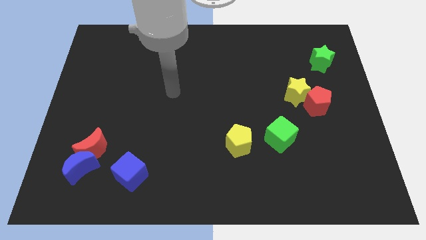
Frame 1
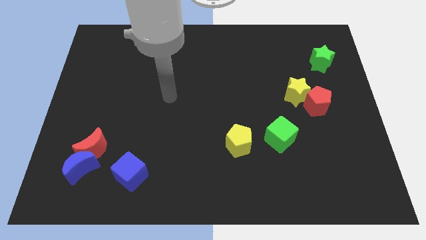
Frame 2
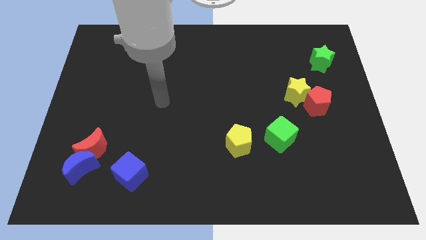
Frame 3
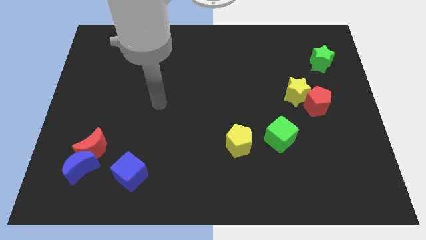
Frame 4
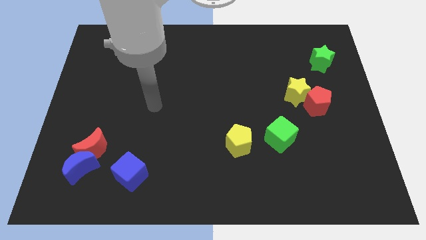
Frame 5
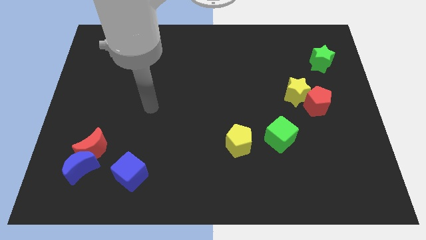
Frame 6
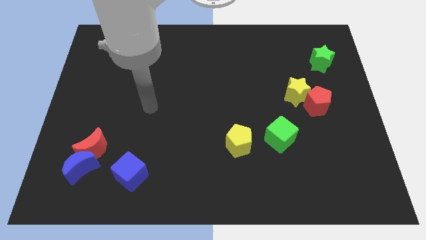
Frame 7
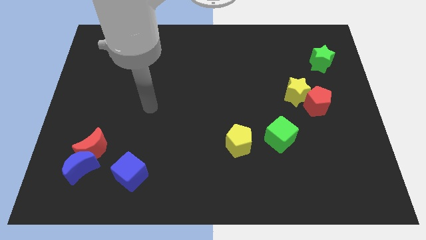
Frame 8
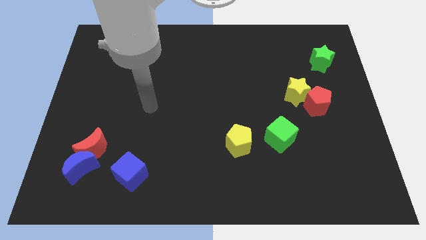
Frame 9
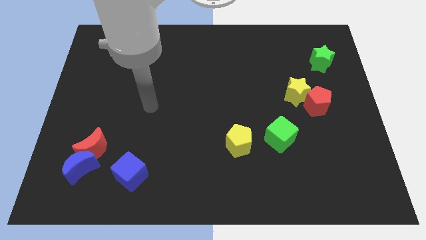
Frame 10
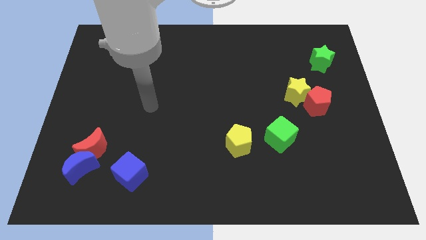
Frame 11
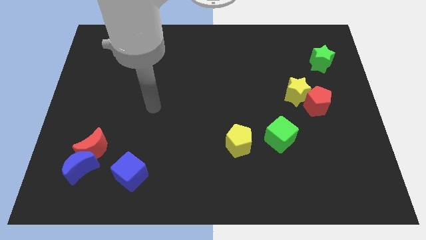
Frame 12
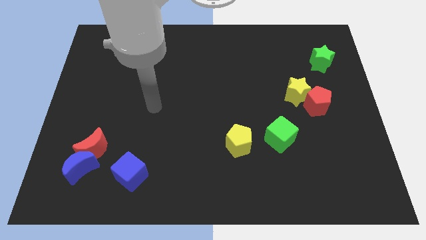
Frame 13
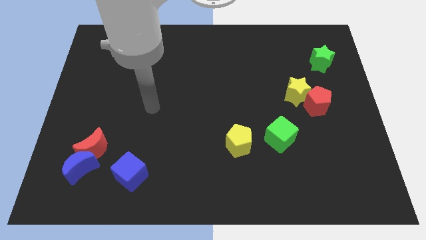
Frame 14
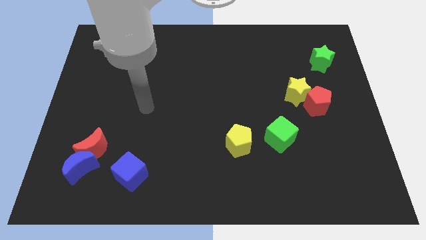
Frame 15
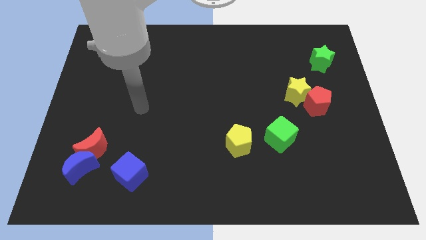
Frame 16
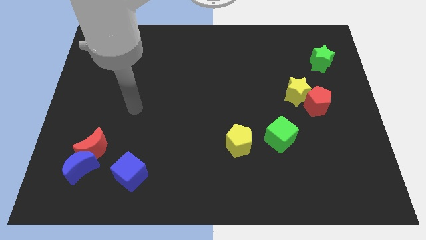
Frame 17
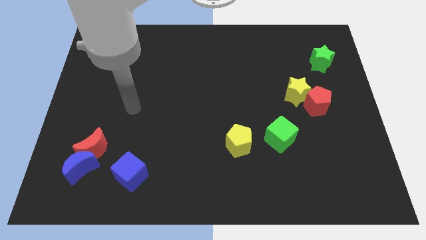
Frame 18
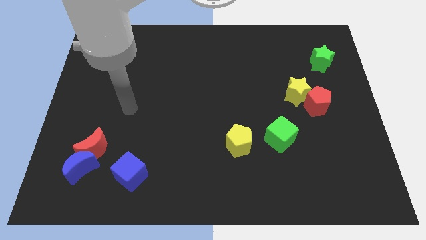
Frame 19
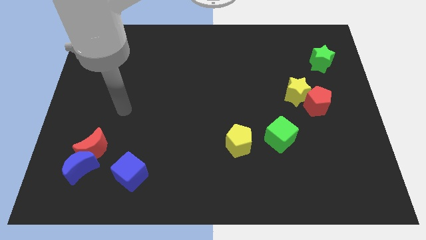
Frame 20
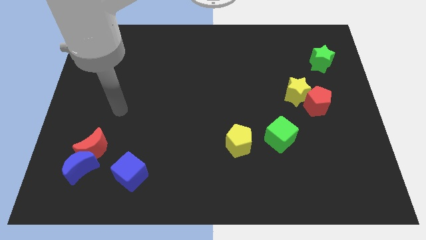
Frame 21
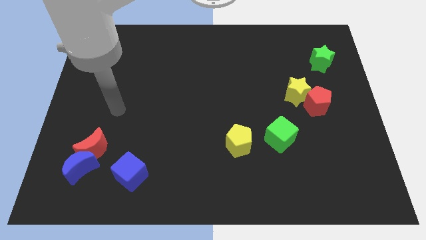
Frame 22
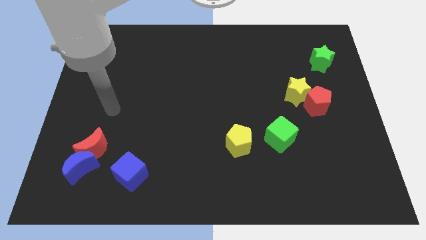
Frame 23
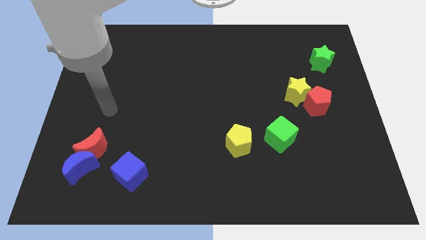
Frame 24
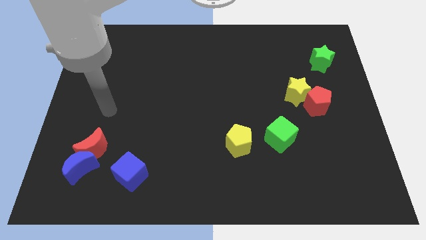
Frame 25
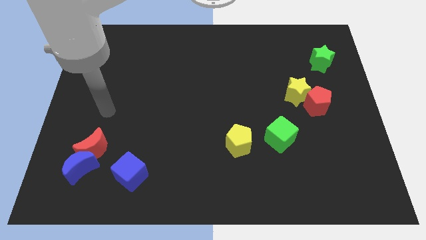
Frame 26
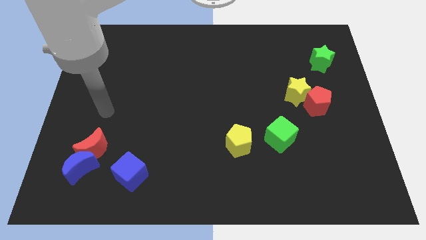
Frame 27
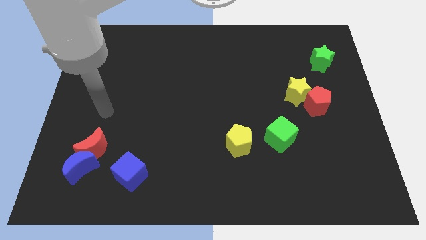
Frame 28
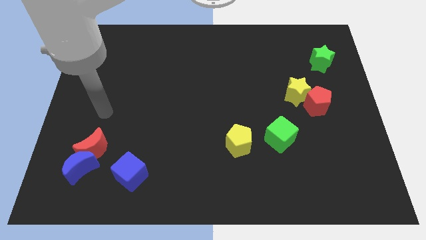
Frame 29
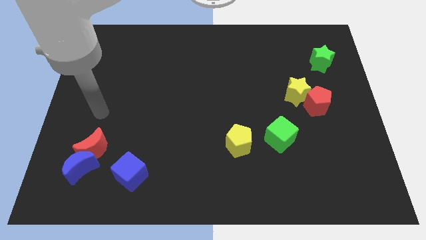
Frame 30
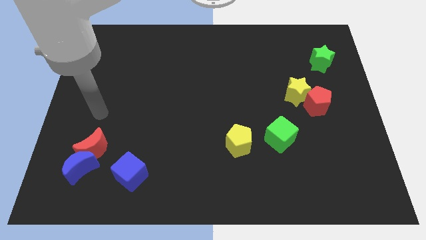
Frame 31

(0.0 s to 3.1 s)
point your arm at the top of the red crescent

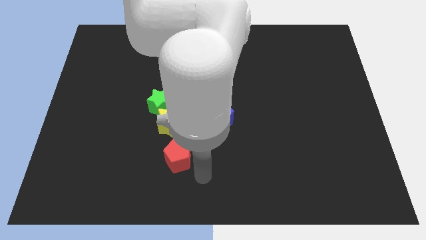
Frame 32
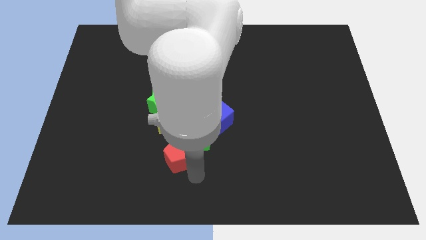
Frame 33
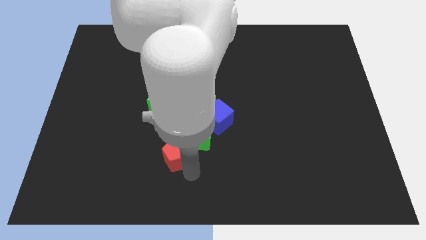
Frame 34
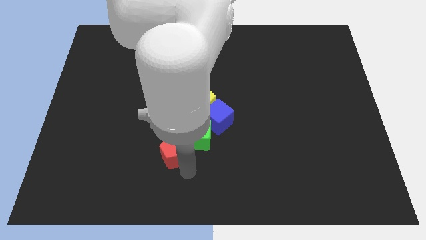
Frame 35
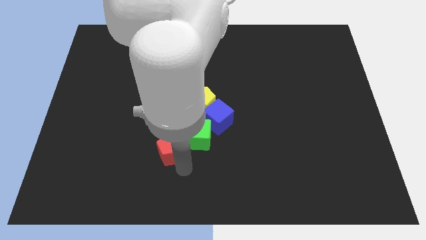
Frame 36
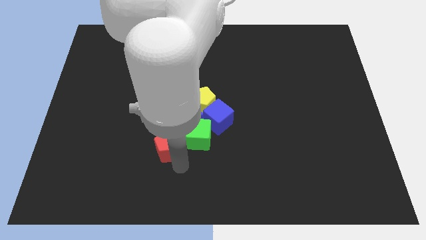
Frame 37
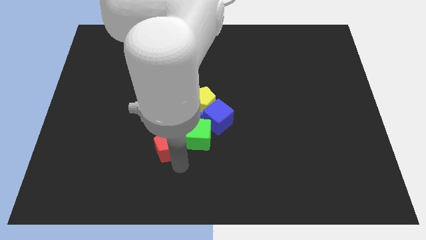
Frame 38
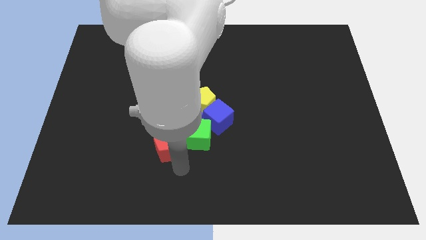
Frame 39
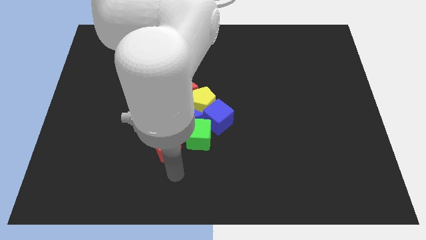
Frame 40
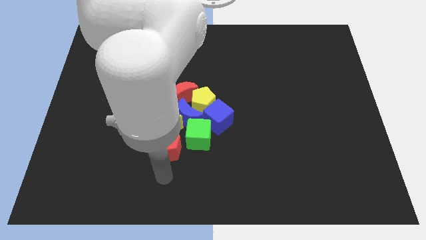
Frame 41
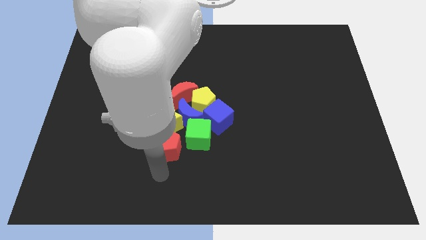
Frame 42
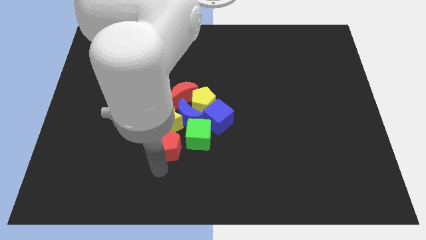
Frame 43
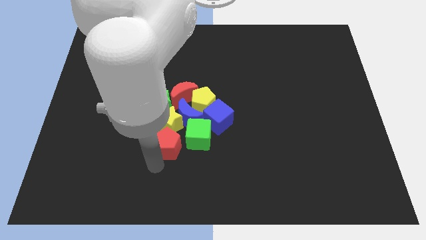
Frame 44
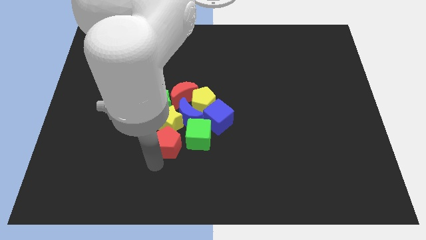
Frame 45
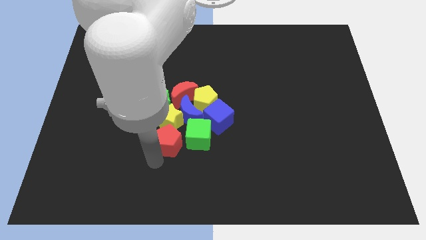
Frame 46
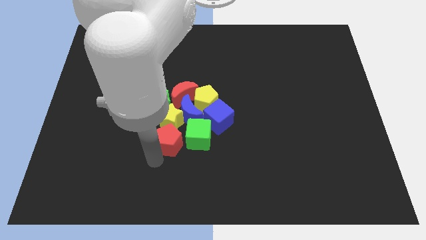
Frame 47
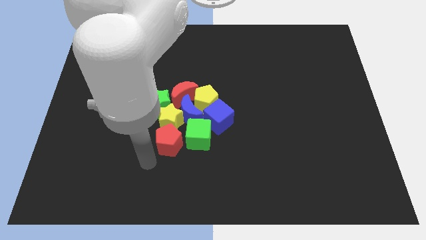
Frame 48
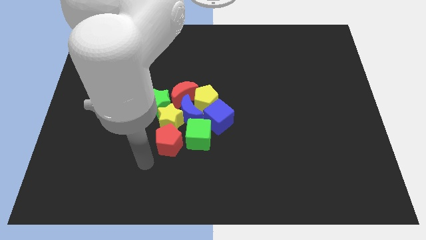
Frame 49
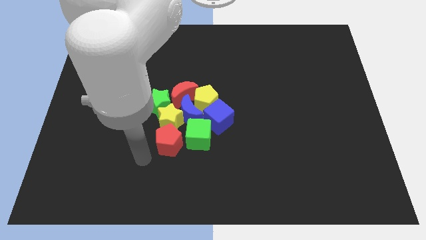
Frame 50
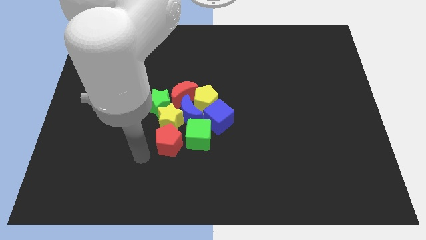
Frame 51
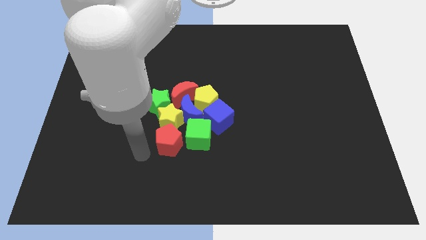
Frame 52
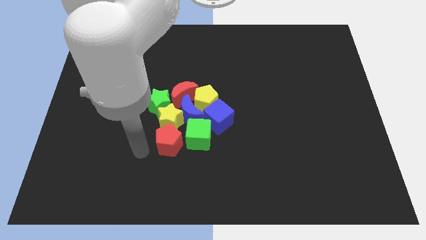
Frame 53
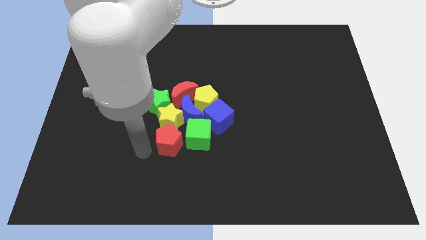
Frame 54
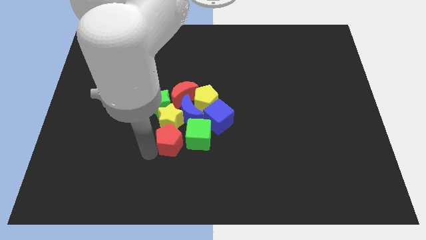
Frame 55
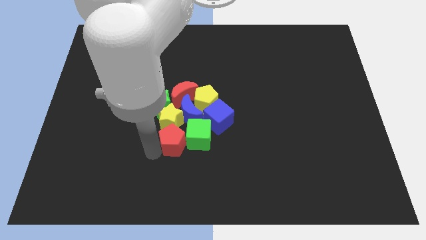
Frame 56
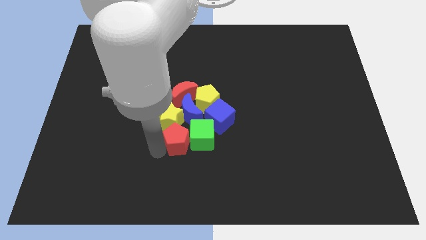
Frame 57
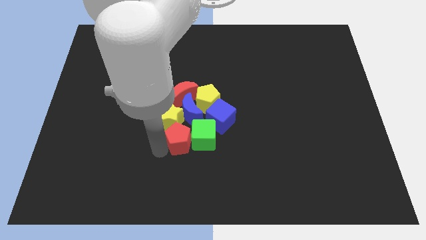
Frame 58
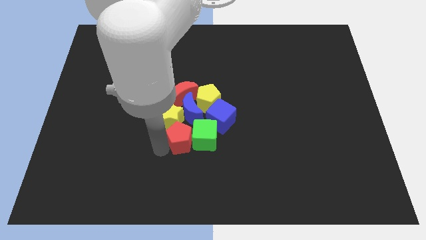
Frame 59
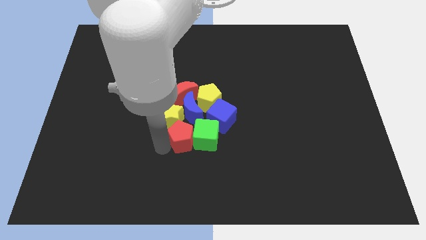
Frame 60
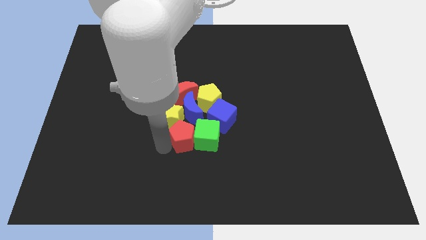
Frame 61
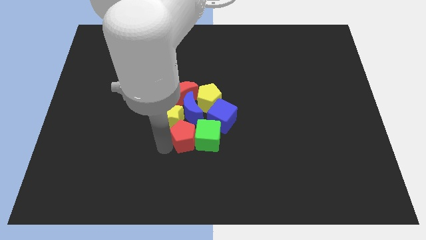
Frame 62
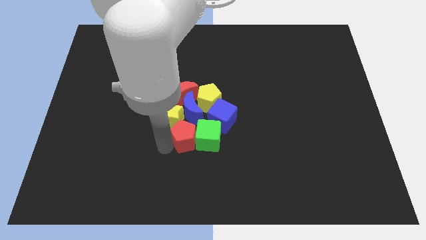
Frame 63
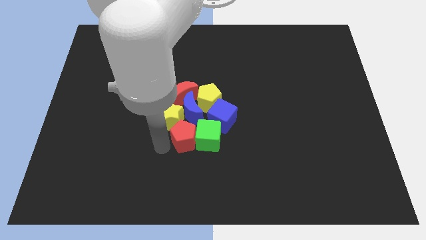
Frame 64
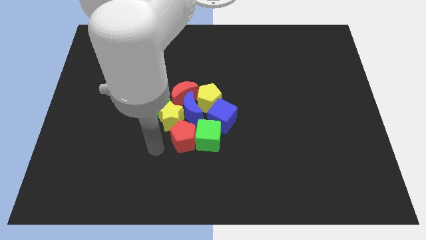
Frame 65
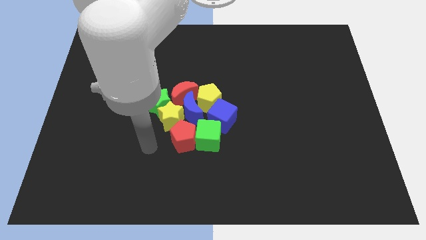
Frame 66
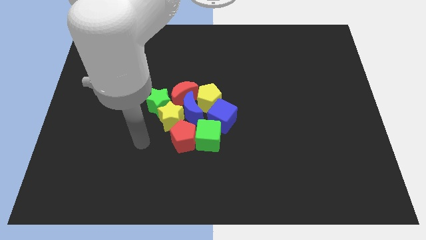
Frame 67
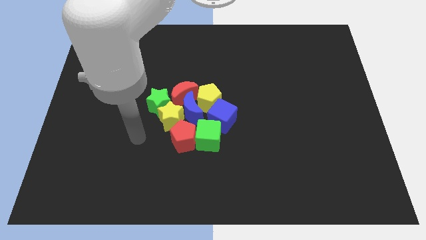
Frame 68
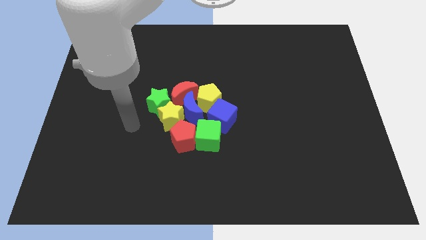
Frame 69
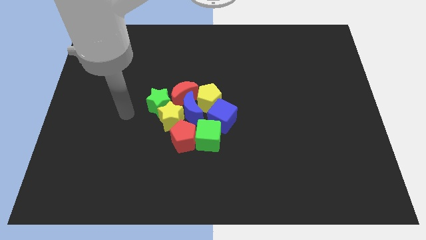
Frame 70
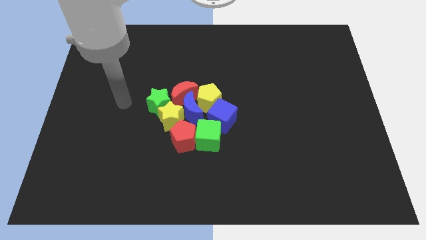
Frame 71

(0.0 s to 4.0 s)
push the red pentagon into the group of blocks

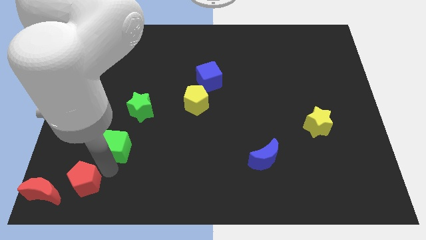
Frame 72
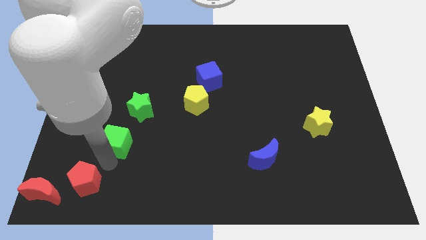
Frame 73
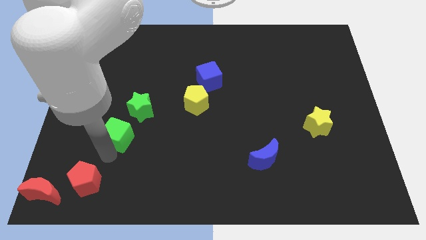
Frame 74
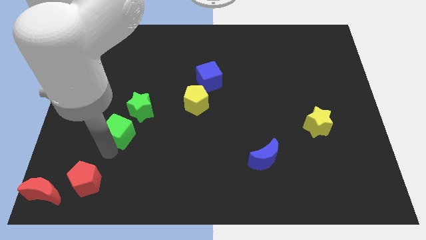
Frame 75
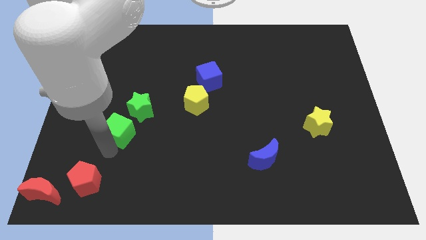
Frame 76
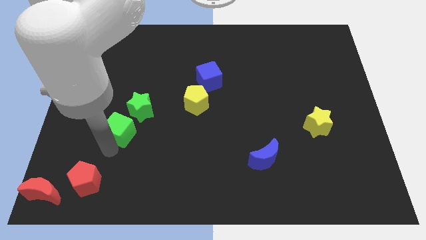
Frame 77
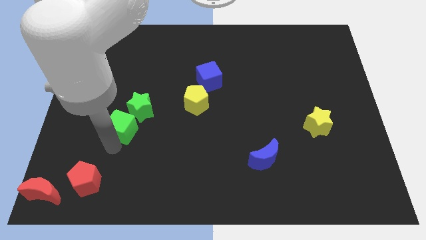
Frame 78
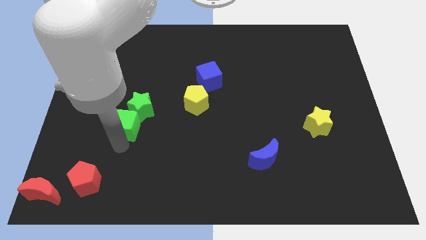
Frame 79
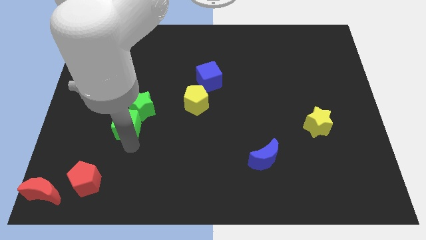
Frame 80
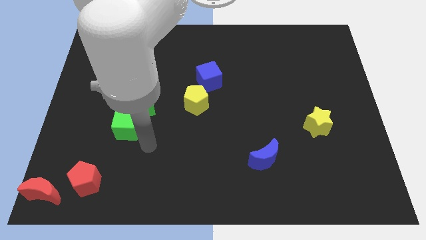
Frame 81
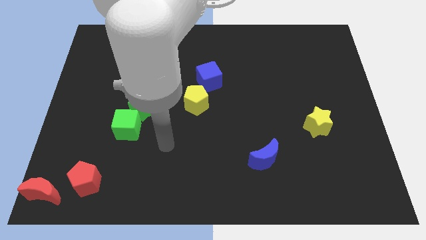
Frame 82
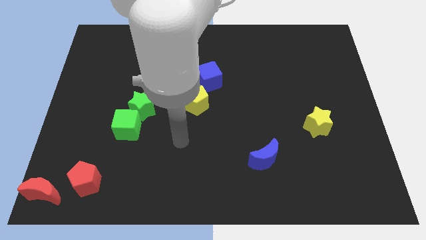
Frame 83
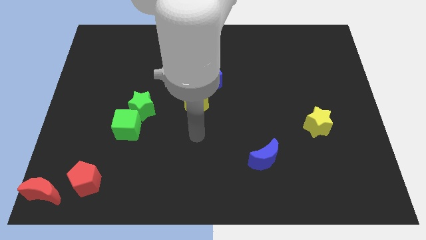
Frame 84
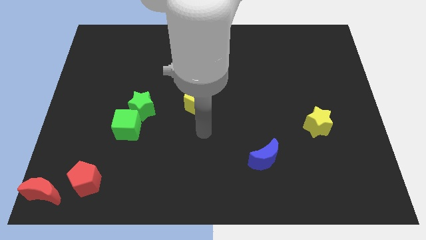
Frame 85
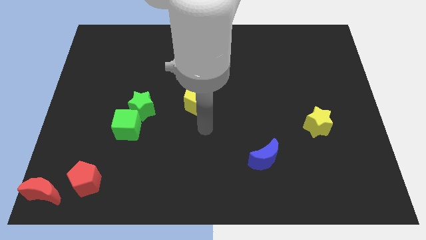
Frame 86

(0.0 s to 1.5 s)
push the green cube into the green star

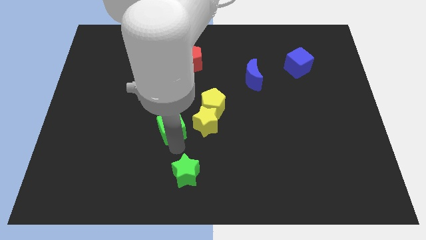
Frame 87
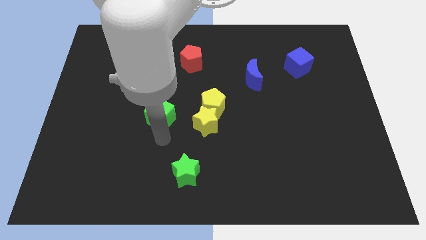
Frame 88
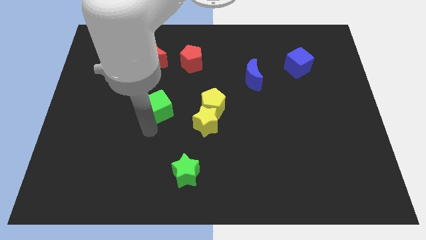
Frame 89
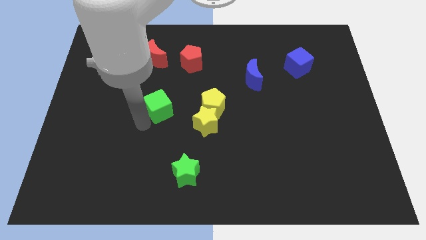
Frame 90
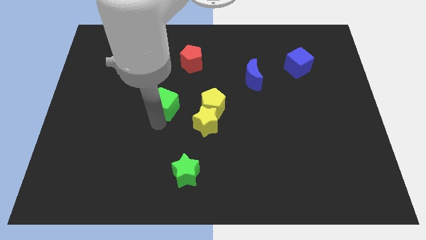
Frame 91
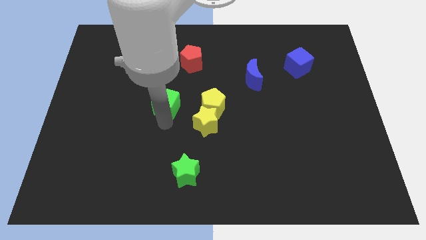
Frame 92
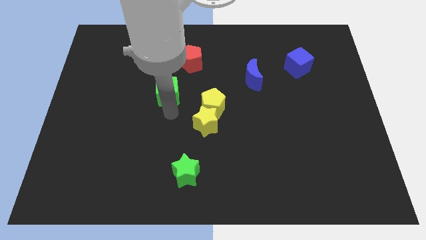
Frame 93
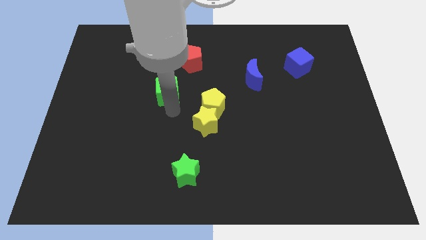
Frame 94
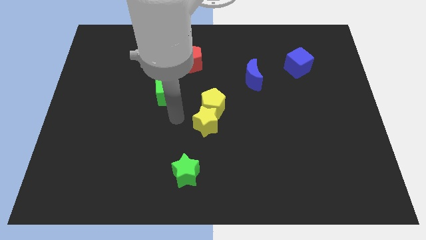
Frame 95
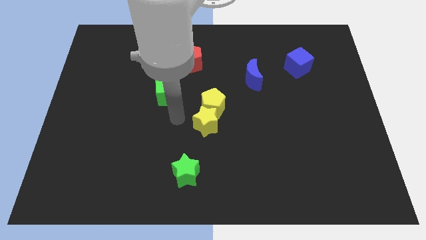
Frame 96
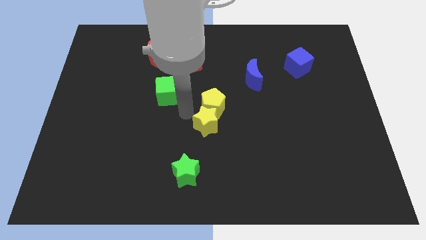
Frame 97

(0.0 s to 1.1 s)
place green cube to the left of the yellow pentagon
